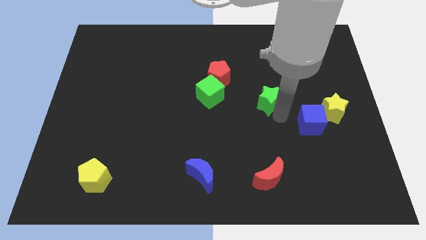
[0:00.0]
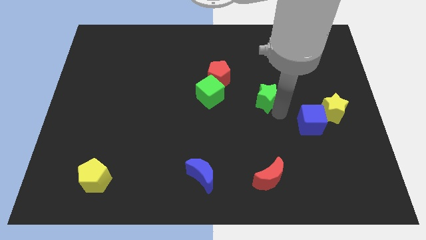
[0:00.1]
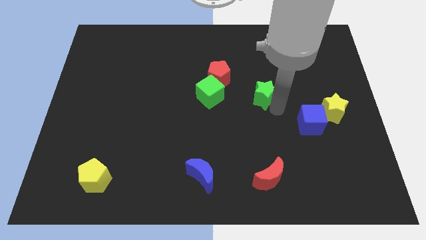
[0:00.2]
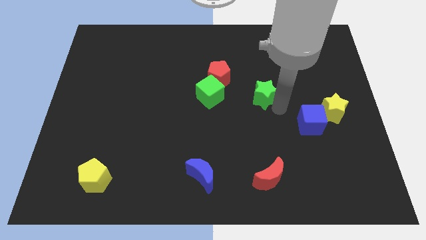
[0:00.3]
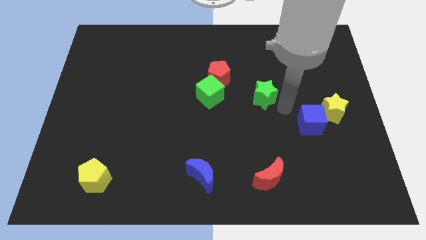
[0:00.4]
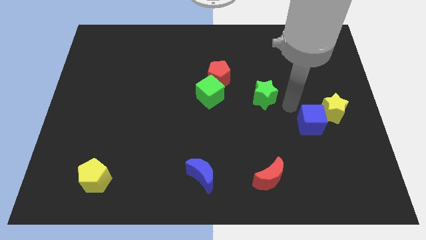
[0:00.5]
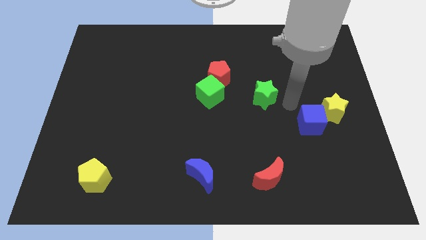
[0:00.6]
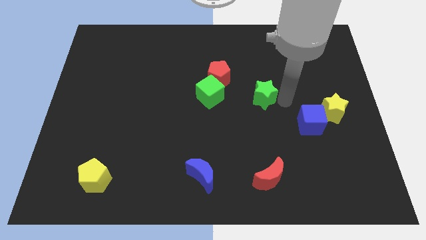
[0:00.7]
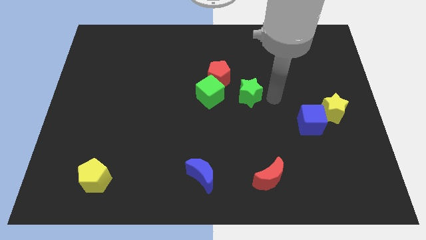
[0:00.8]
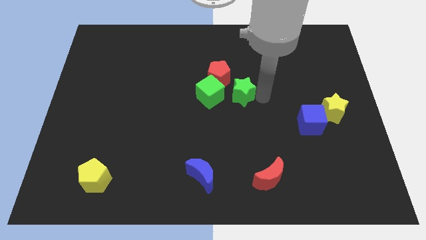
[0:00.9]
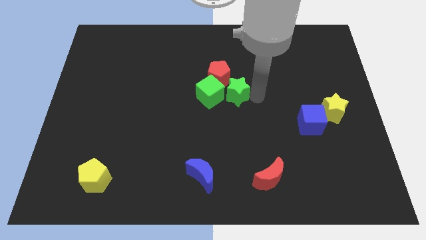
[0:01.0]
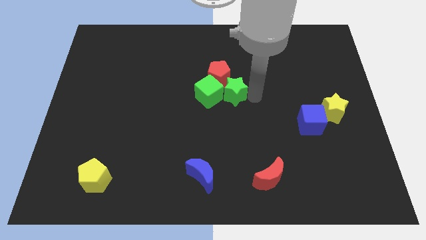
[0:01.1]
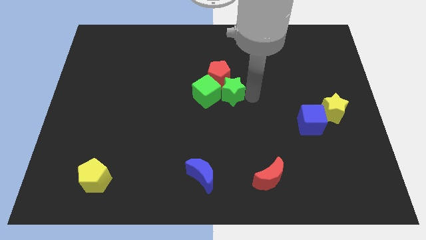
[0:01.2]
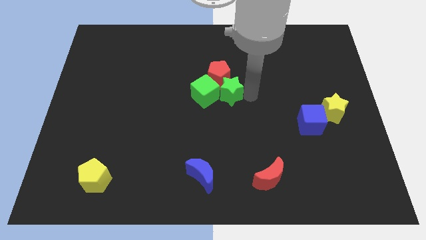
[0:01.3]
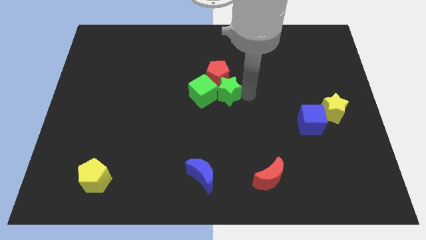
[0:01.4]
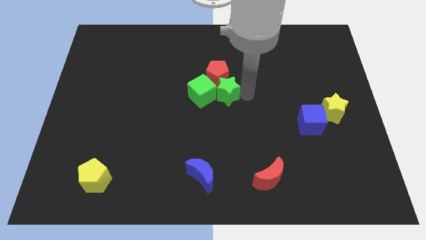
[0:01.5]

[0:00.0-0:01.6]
push green star in to green cube

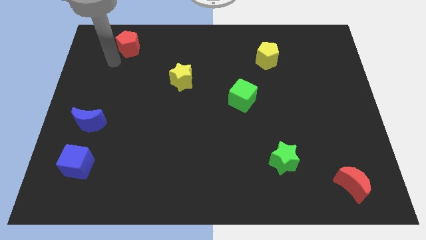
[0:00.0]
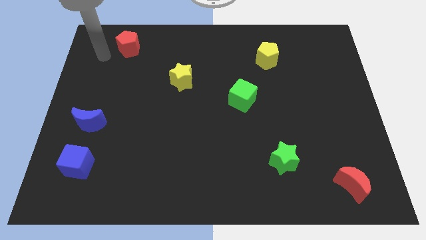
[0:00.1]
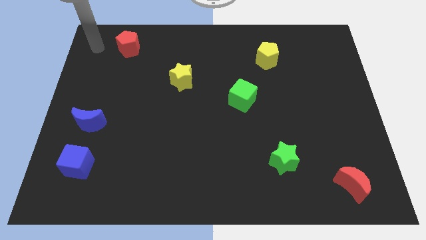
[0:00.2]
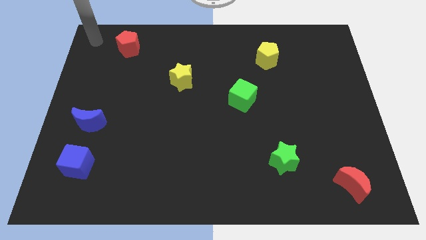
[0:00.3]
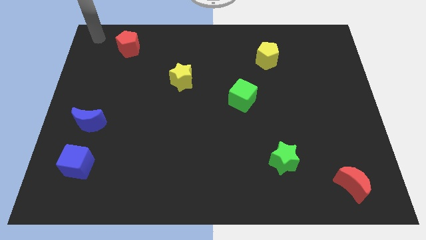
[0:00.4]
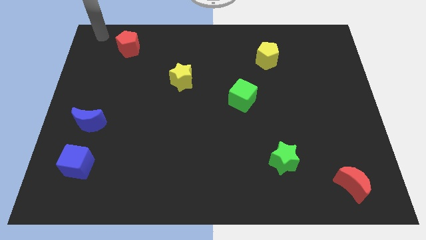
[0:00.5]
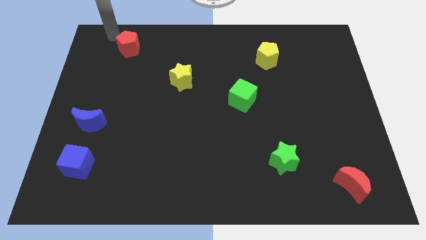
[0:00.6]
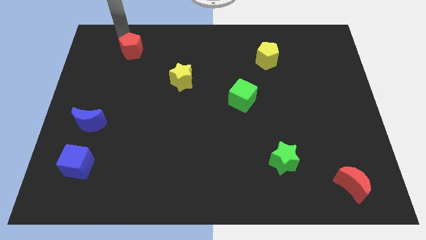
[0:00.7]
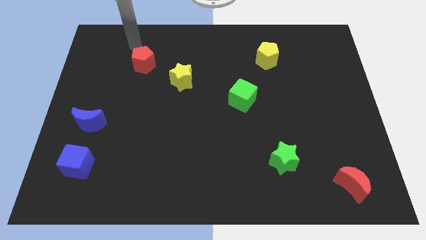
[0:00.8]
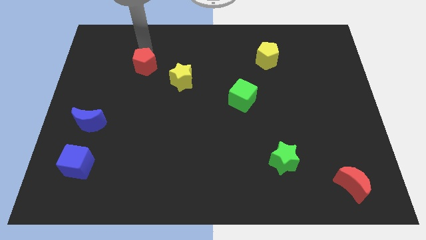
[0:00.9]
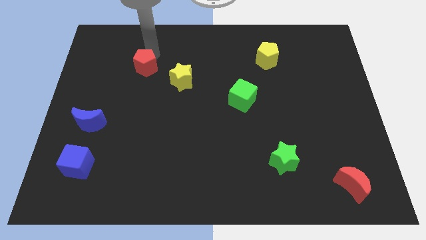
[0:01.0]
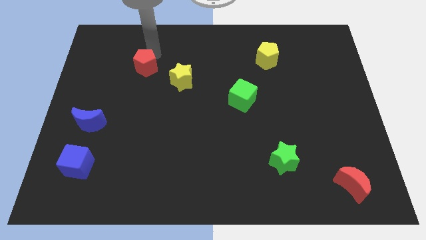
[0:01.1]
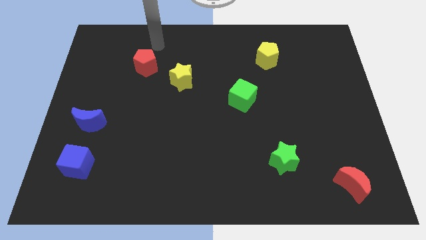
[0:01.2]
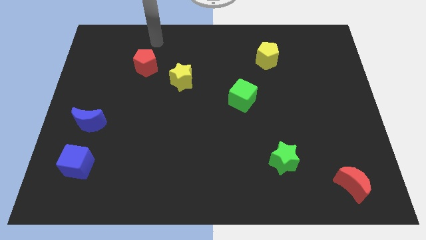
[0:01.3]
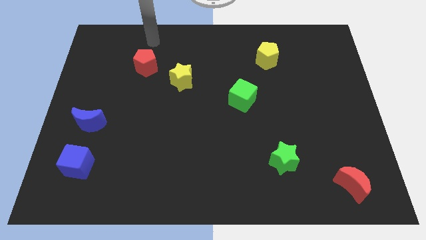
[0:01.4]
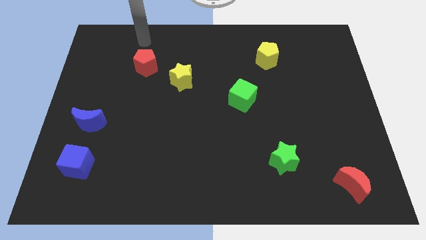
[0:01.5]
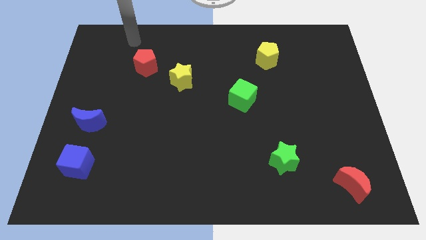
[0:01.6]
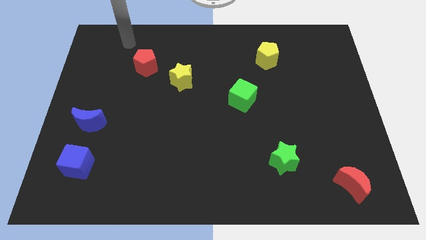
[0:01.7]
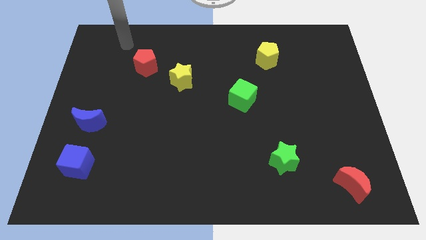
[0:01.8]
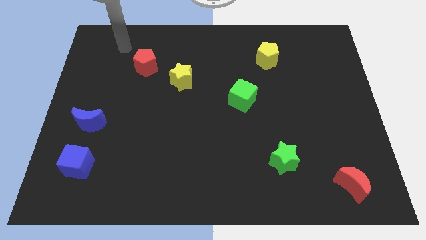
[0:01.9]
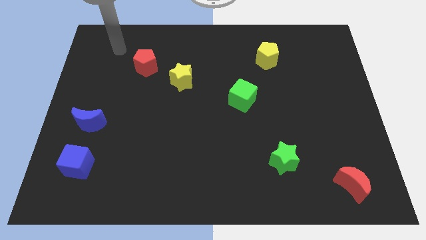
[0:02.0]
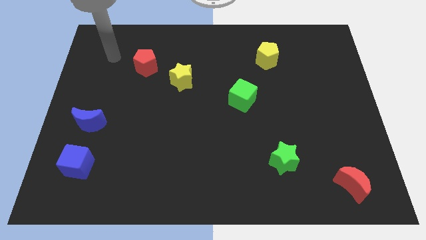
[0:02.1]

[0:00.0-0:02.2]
move the red pentagon towards green star

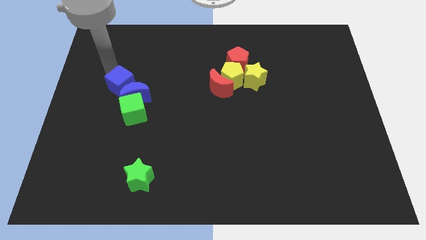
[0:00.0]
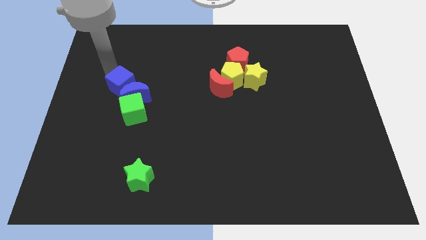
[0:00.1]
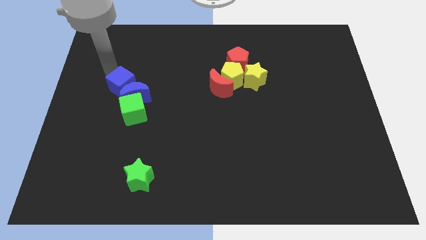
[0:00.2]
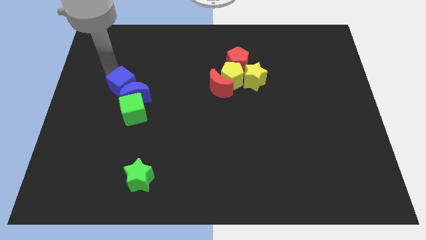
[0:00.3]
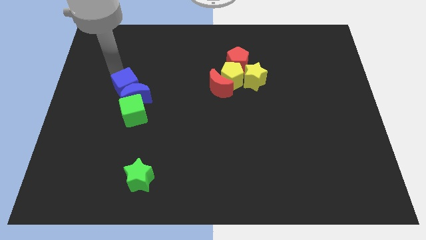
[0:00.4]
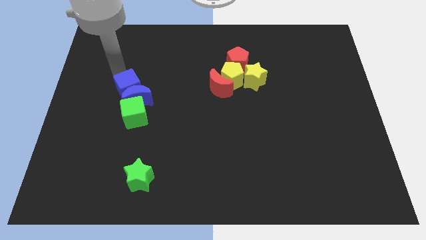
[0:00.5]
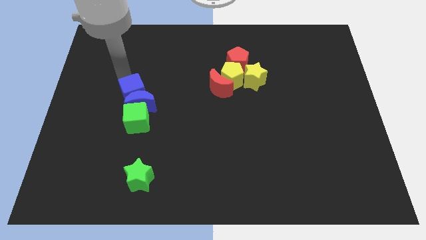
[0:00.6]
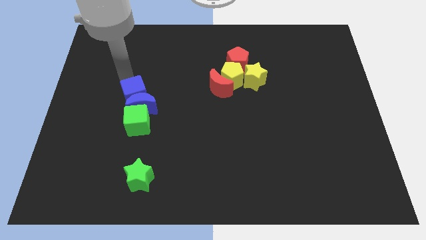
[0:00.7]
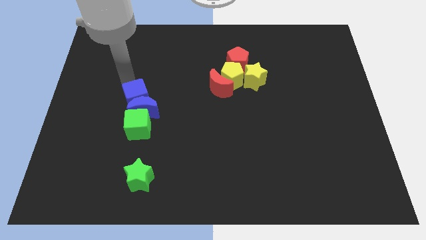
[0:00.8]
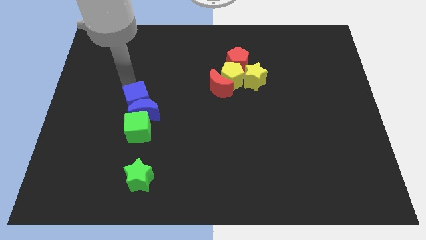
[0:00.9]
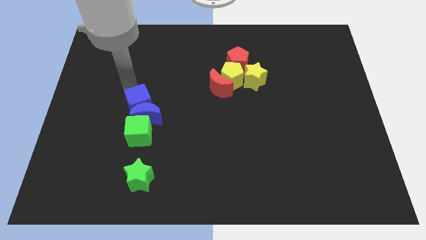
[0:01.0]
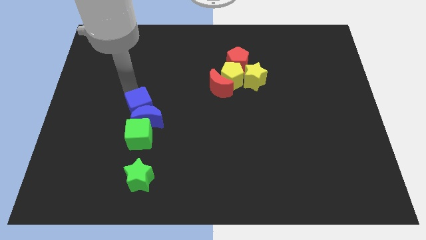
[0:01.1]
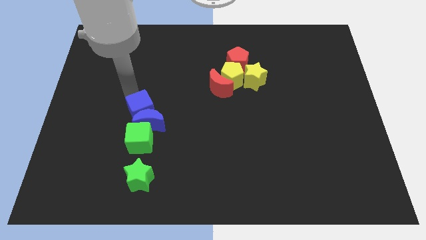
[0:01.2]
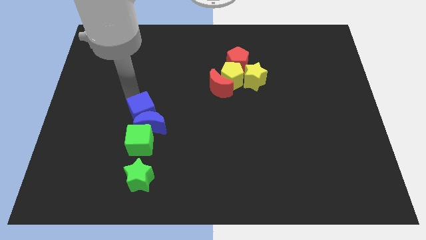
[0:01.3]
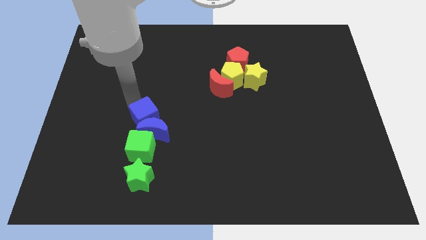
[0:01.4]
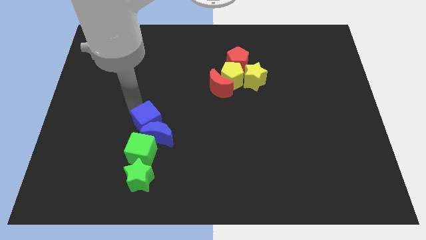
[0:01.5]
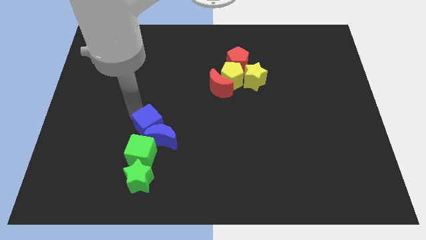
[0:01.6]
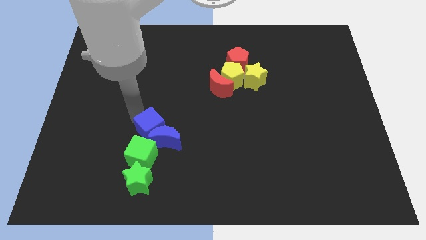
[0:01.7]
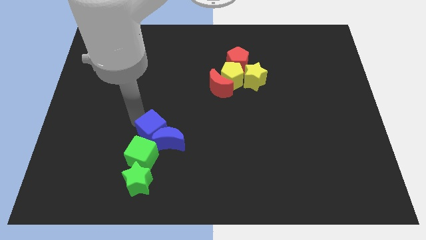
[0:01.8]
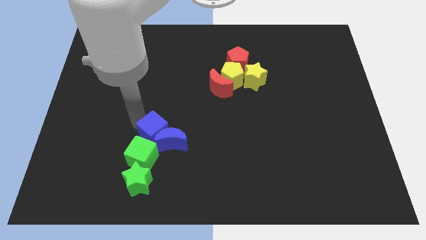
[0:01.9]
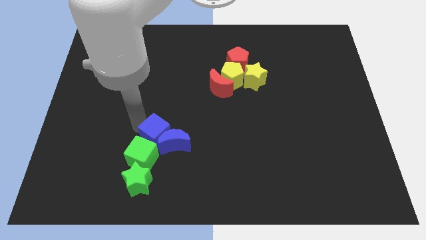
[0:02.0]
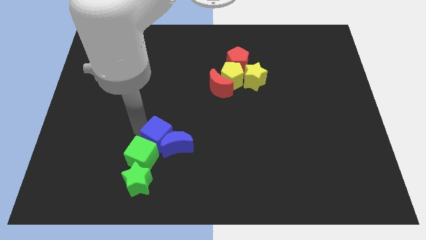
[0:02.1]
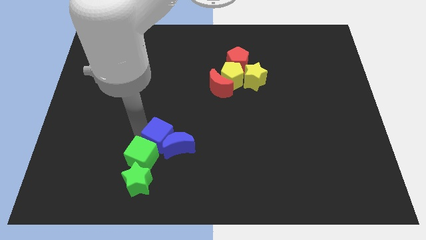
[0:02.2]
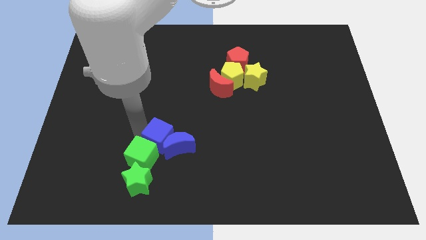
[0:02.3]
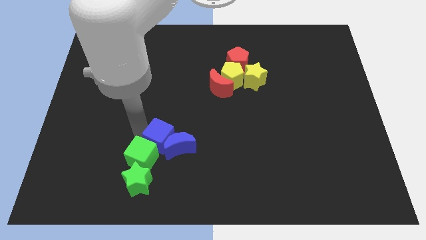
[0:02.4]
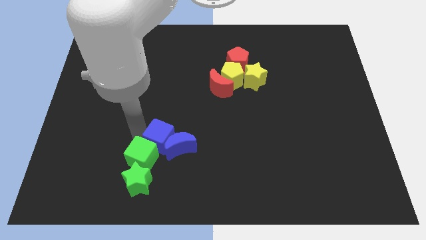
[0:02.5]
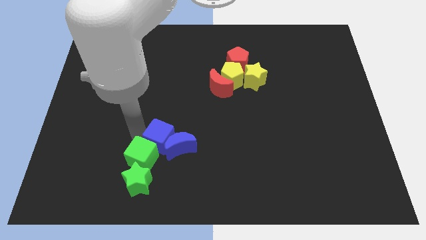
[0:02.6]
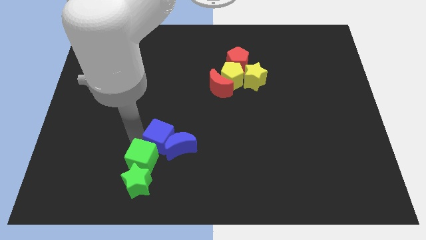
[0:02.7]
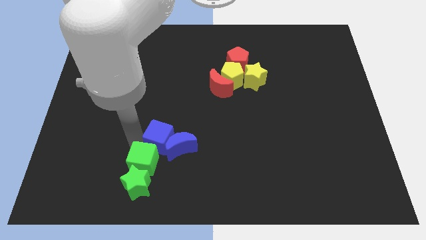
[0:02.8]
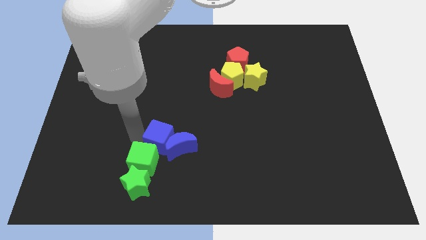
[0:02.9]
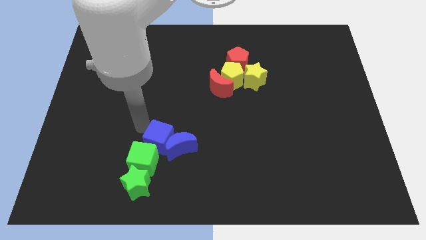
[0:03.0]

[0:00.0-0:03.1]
push the green cube into the green star

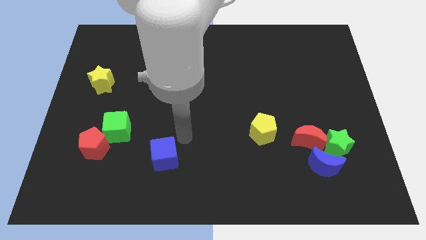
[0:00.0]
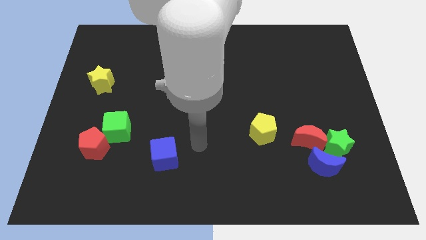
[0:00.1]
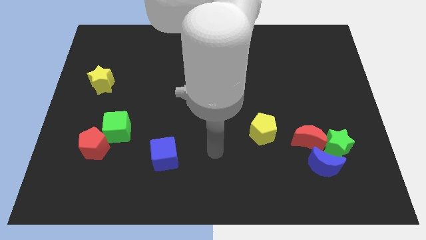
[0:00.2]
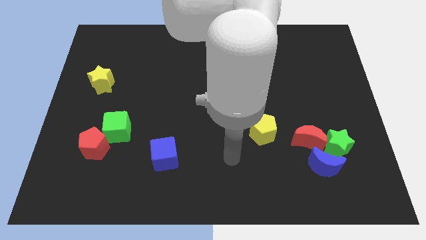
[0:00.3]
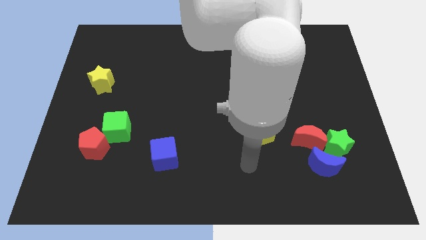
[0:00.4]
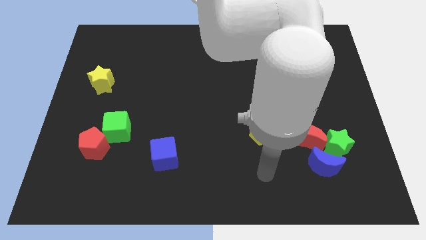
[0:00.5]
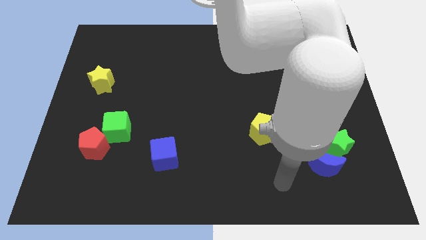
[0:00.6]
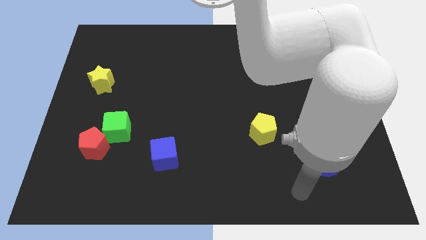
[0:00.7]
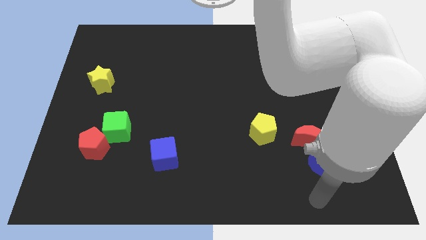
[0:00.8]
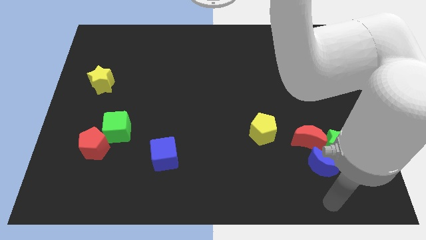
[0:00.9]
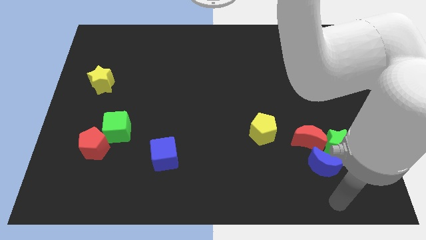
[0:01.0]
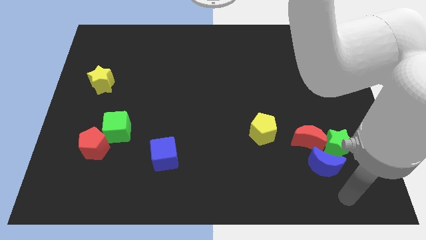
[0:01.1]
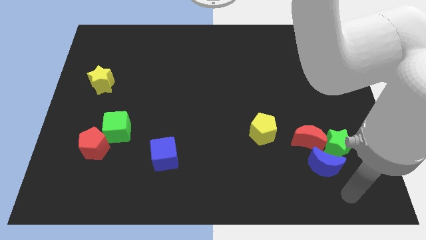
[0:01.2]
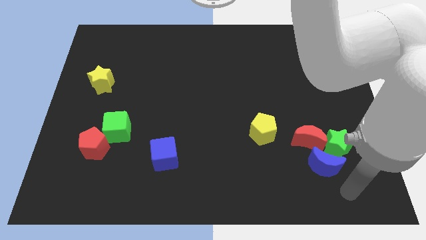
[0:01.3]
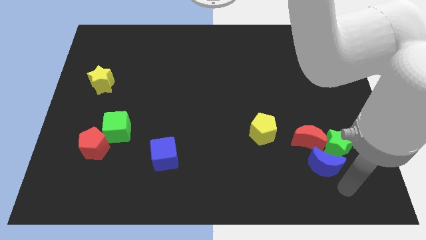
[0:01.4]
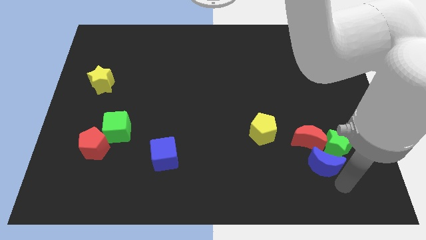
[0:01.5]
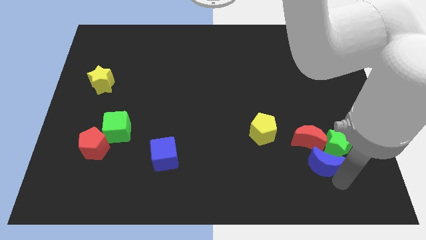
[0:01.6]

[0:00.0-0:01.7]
move the arm closer to the blue crescent

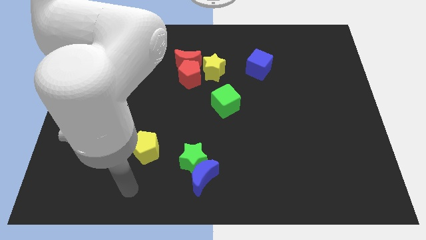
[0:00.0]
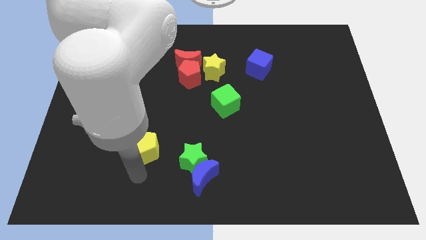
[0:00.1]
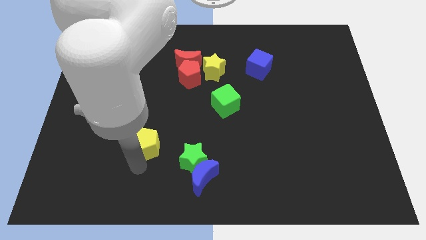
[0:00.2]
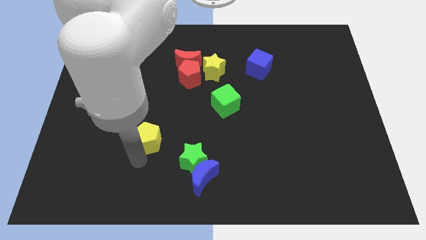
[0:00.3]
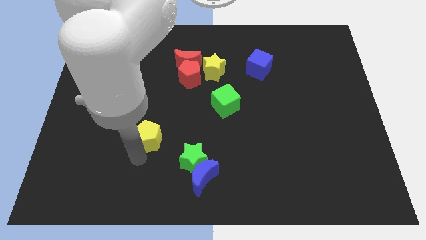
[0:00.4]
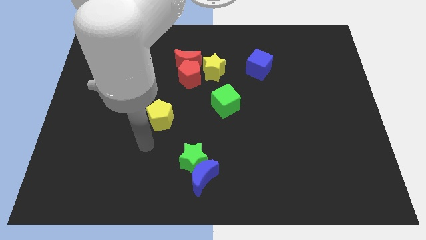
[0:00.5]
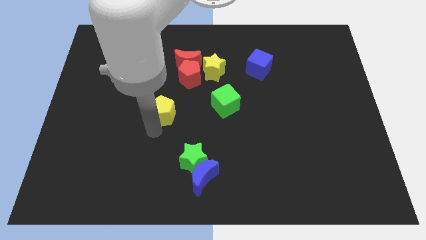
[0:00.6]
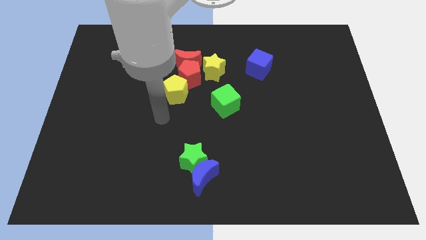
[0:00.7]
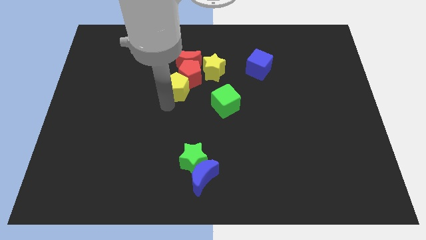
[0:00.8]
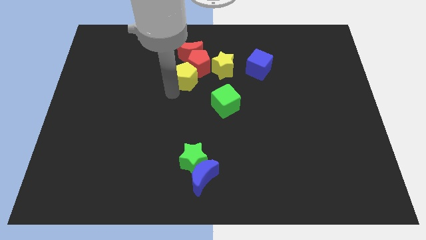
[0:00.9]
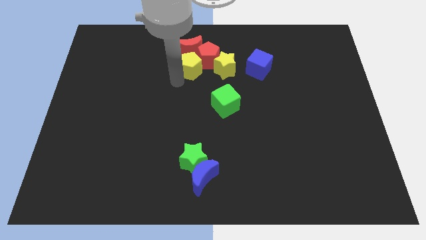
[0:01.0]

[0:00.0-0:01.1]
move the yellow pentagon into the group of blocks
